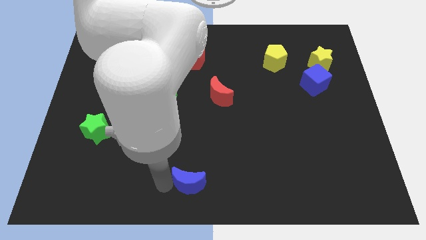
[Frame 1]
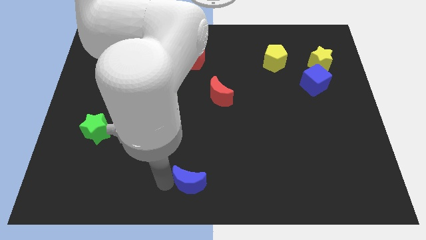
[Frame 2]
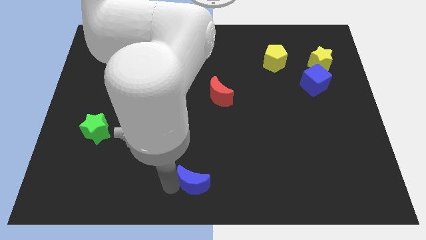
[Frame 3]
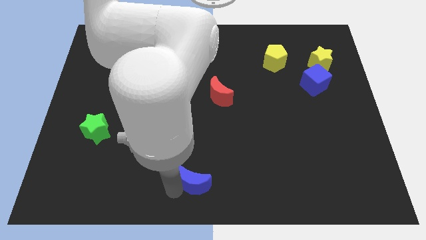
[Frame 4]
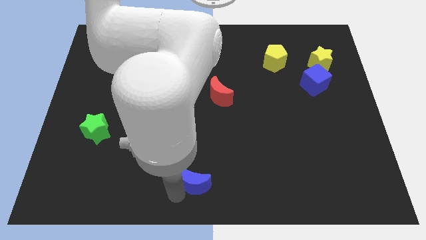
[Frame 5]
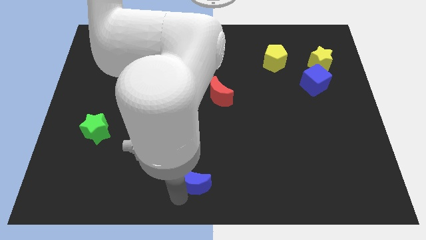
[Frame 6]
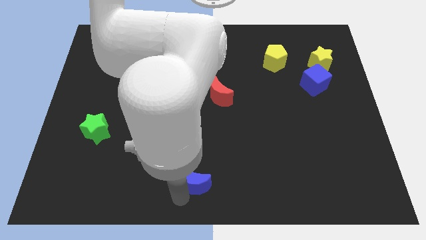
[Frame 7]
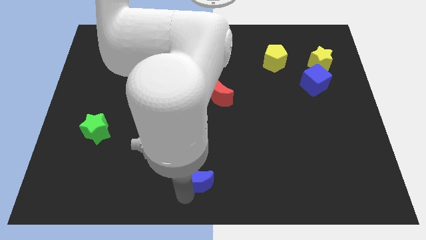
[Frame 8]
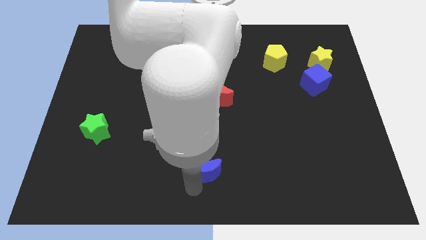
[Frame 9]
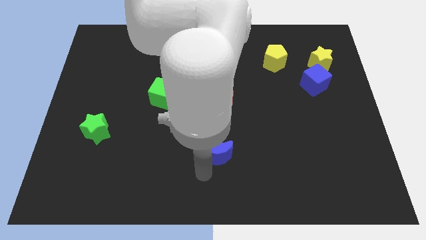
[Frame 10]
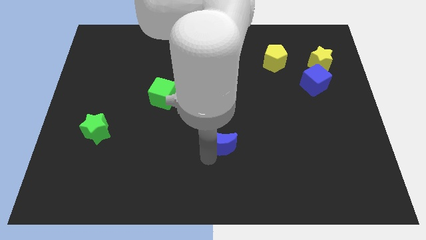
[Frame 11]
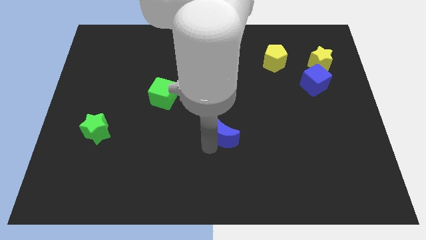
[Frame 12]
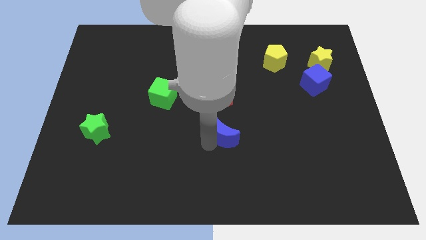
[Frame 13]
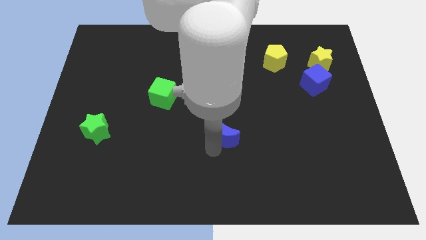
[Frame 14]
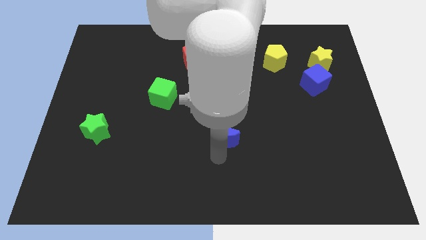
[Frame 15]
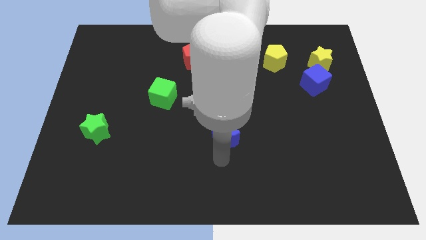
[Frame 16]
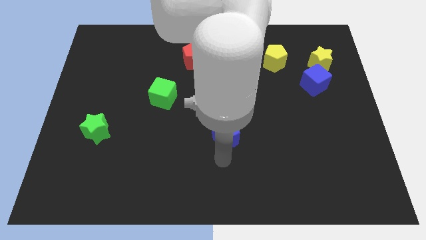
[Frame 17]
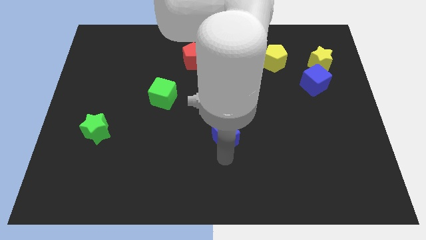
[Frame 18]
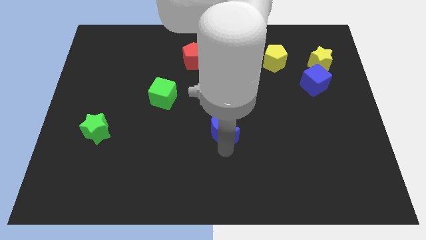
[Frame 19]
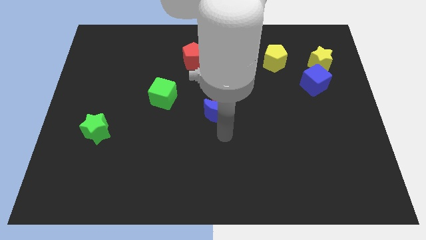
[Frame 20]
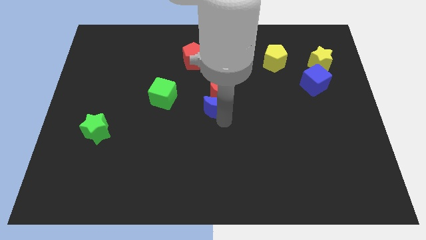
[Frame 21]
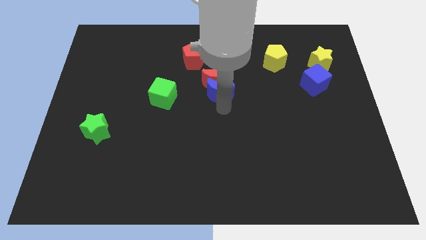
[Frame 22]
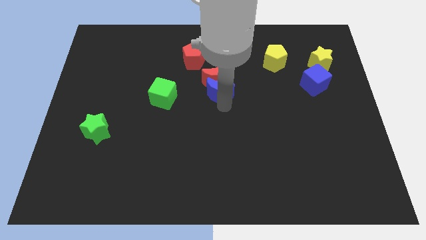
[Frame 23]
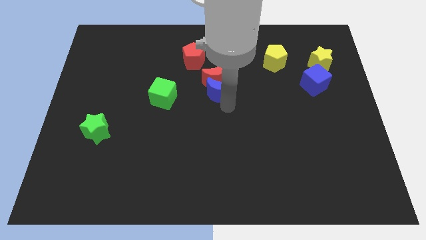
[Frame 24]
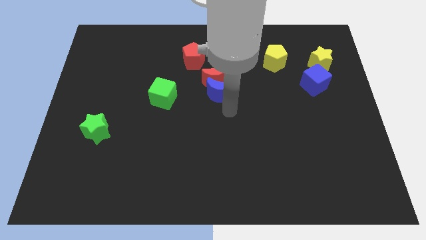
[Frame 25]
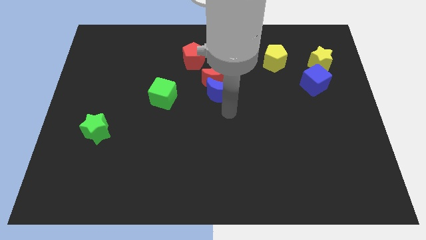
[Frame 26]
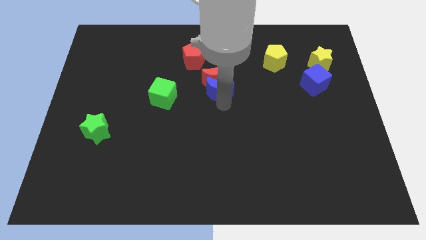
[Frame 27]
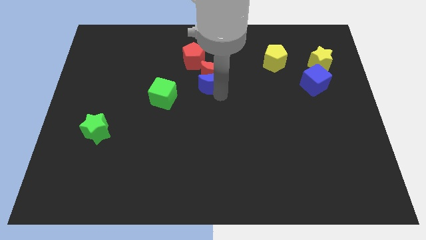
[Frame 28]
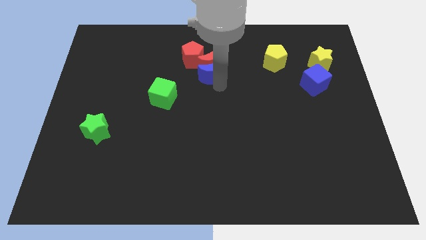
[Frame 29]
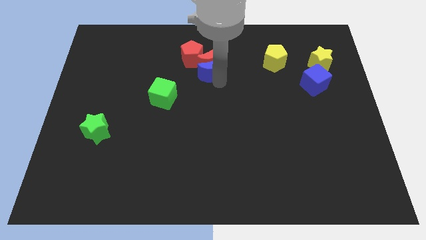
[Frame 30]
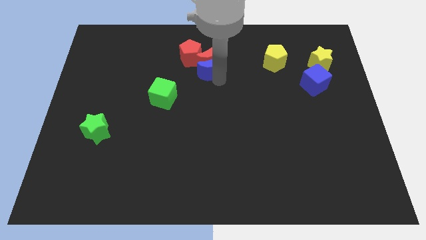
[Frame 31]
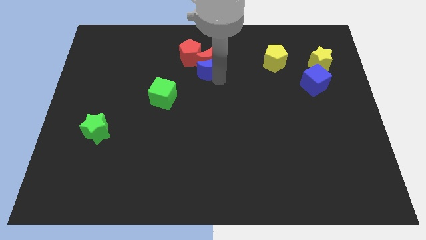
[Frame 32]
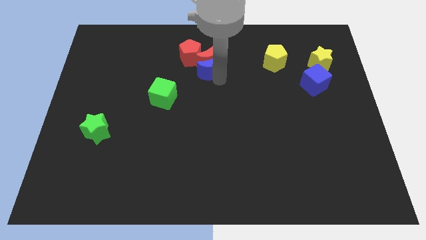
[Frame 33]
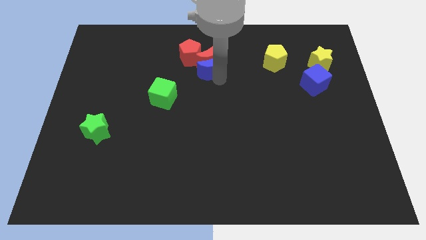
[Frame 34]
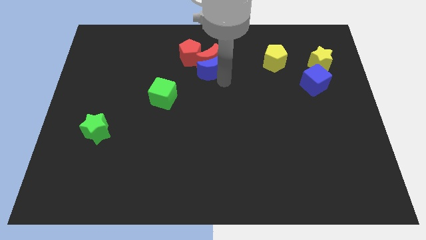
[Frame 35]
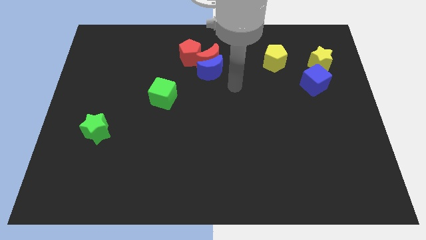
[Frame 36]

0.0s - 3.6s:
move the blue moon and red moon into the red pentagon

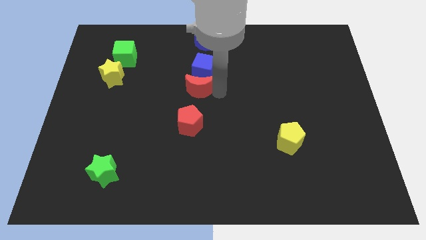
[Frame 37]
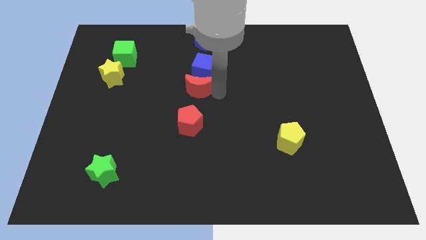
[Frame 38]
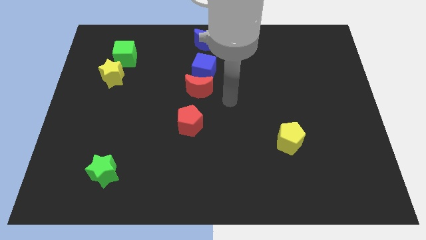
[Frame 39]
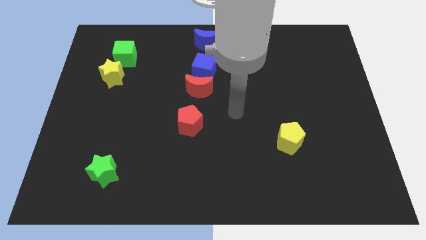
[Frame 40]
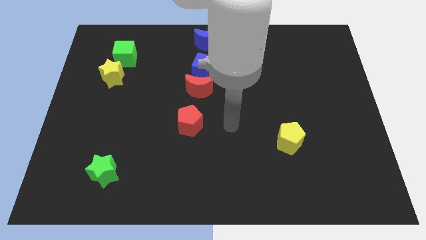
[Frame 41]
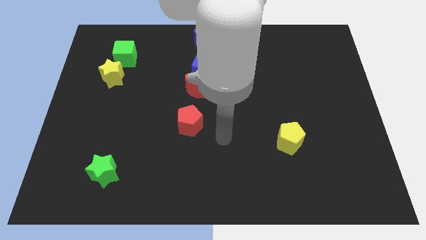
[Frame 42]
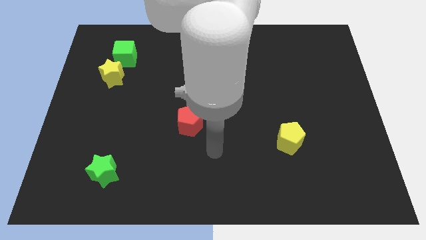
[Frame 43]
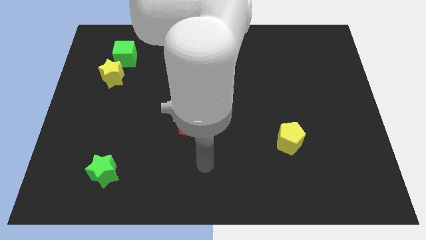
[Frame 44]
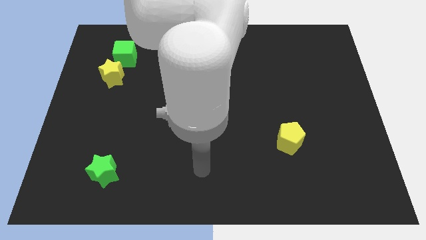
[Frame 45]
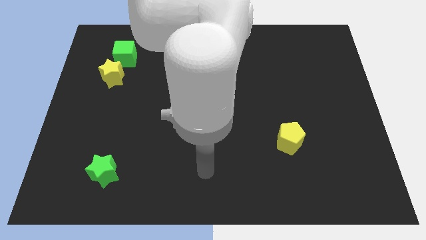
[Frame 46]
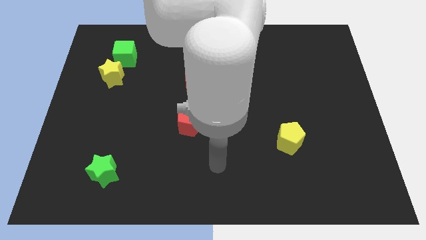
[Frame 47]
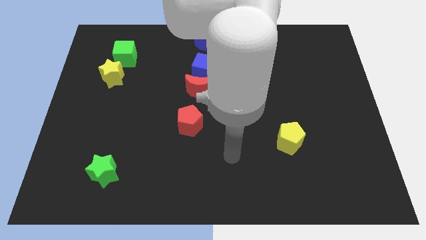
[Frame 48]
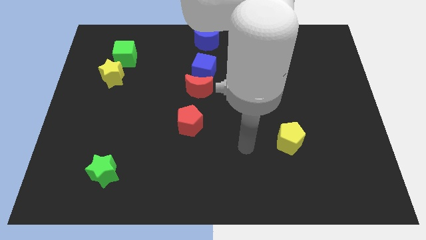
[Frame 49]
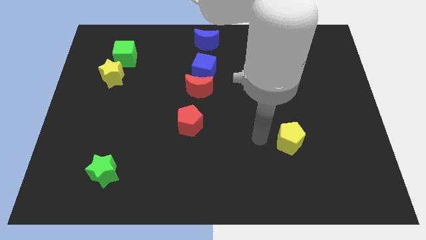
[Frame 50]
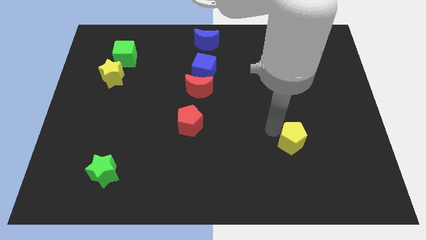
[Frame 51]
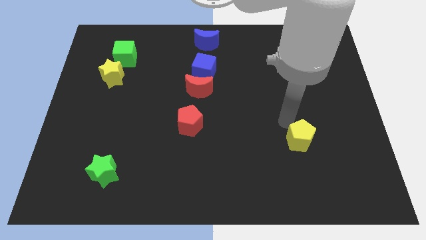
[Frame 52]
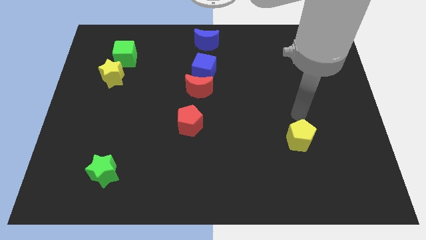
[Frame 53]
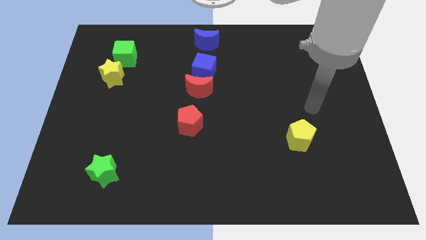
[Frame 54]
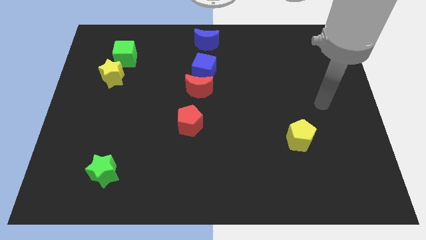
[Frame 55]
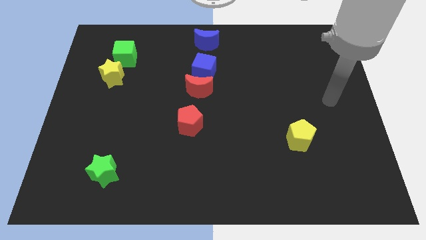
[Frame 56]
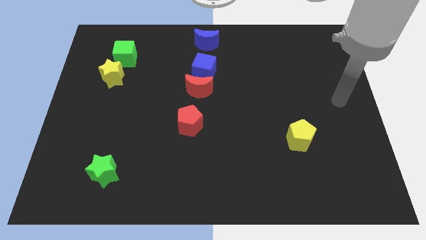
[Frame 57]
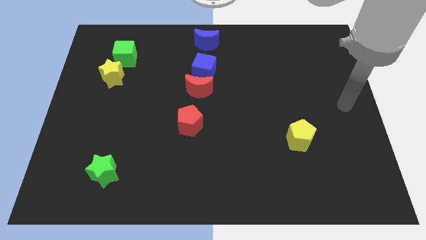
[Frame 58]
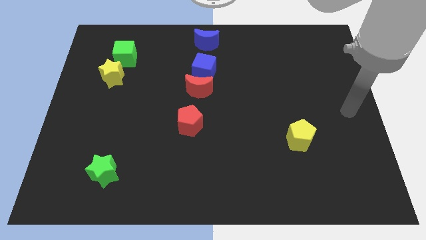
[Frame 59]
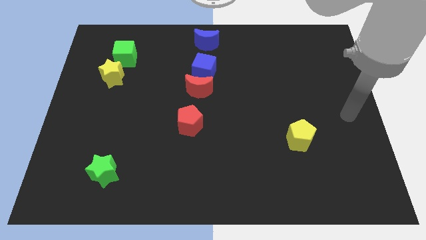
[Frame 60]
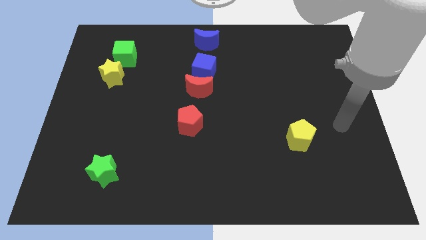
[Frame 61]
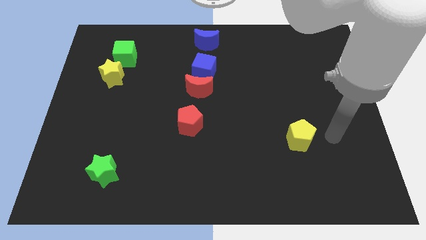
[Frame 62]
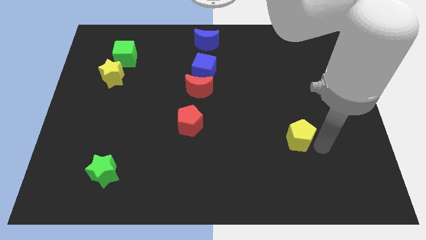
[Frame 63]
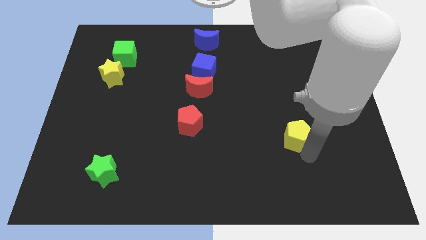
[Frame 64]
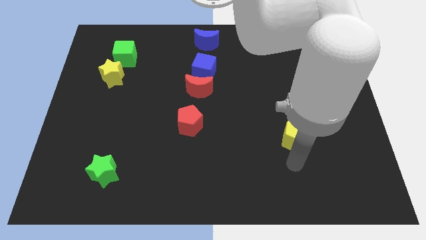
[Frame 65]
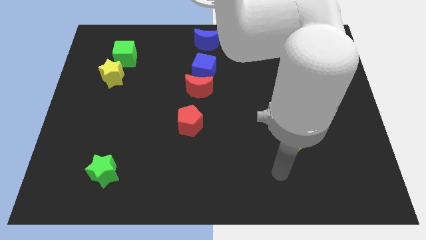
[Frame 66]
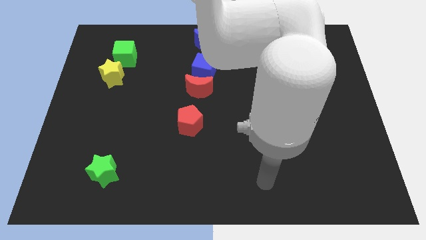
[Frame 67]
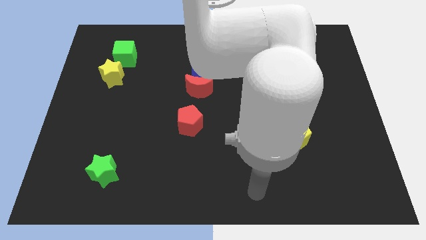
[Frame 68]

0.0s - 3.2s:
place the arm to the bottom of the yellow pentagon

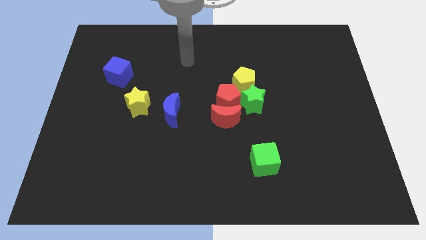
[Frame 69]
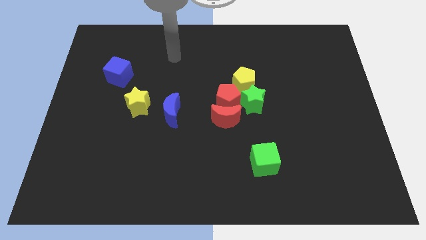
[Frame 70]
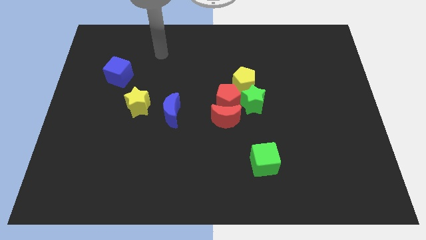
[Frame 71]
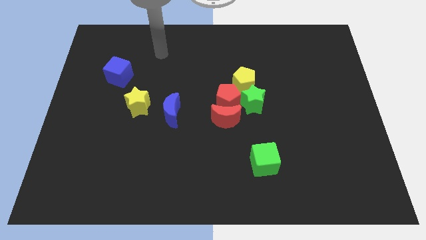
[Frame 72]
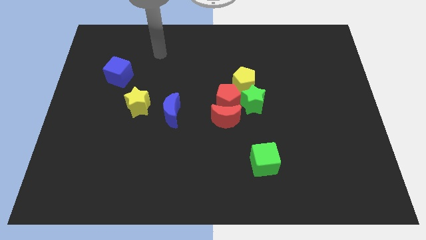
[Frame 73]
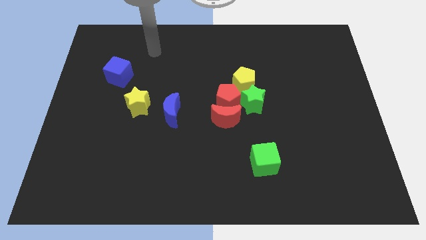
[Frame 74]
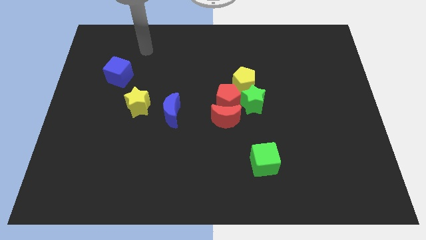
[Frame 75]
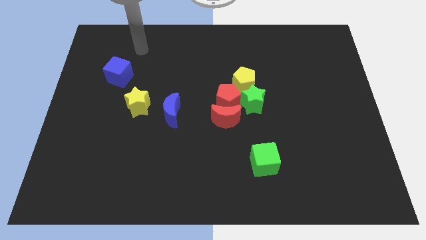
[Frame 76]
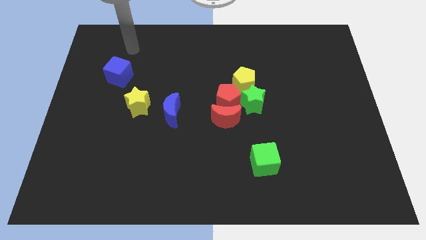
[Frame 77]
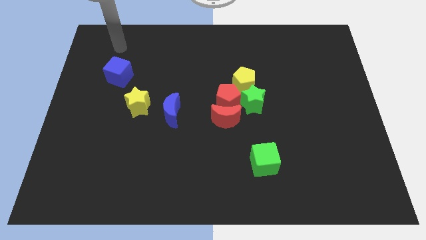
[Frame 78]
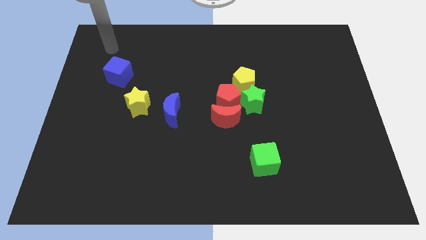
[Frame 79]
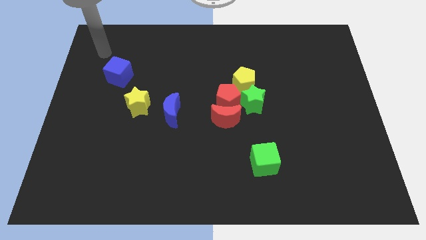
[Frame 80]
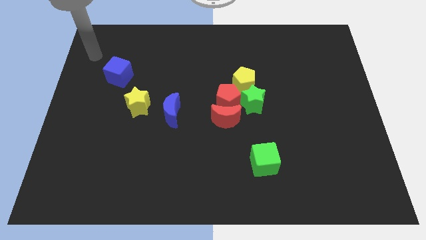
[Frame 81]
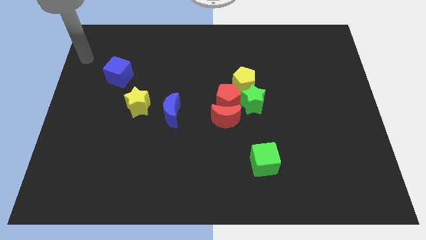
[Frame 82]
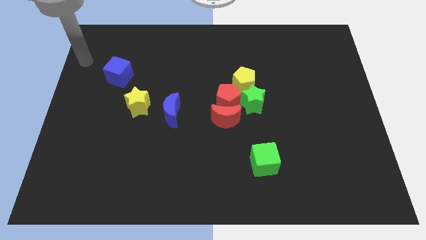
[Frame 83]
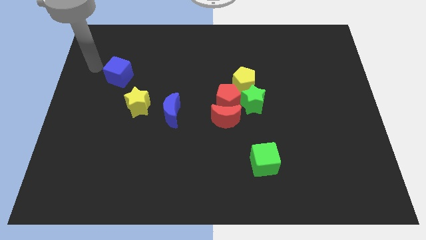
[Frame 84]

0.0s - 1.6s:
move the arm towards the blue cube

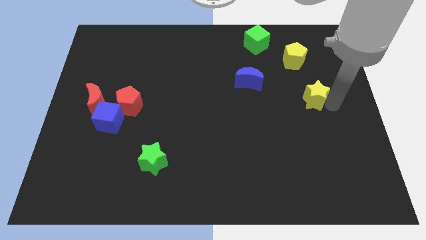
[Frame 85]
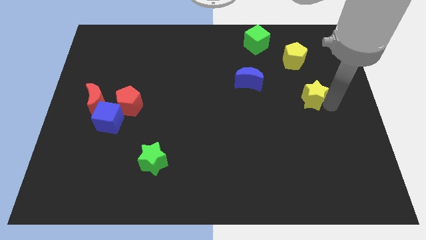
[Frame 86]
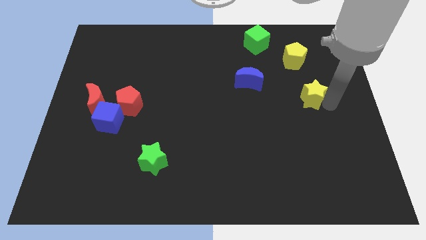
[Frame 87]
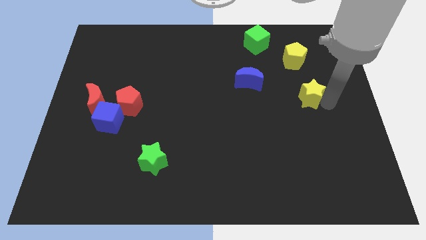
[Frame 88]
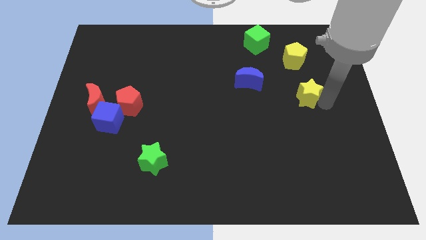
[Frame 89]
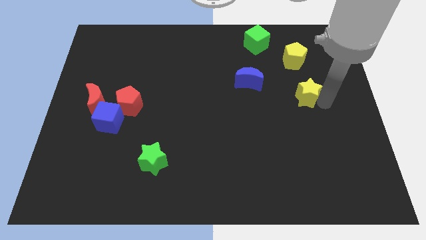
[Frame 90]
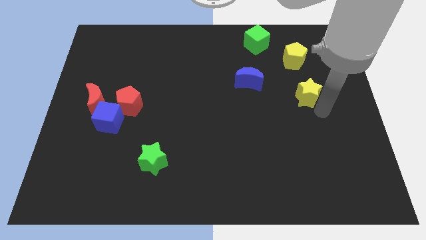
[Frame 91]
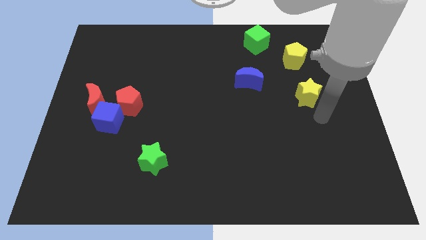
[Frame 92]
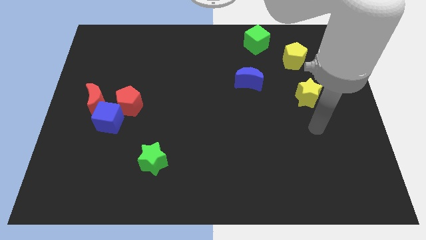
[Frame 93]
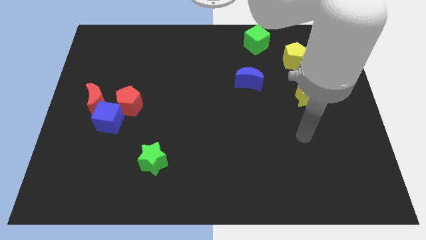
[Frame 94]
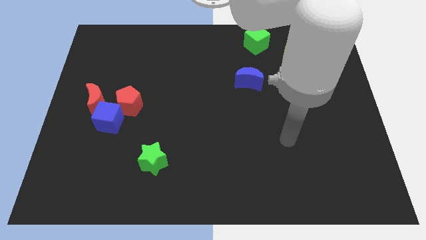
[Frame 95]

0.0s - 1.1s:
place yellow star vertical to yellow pentagon
